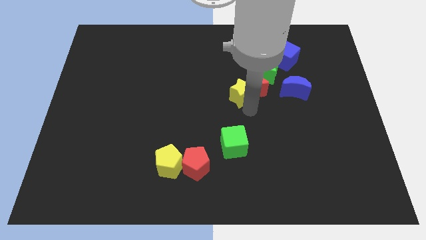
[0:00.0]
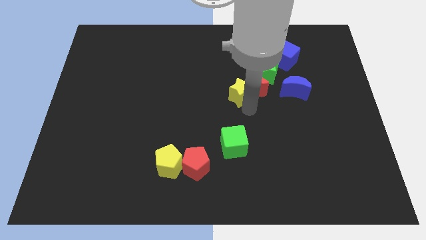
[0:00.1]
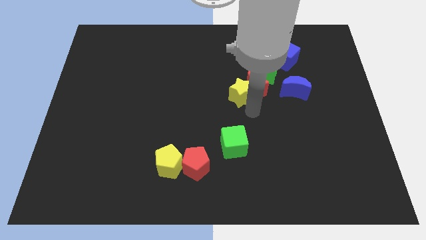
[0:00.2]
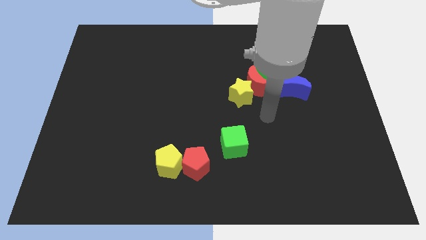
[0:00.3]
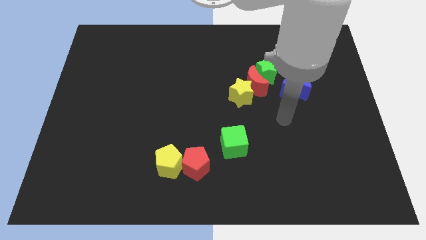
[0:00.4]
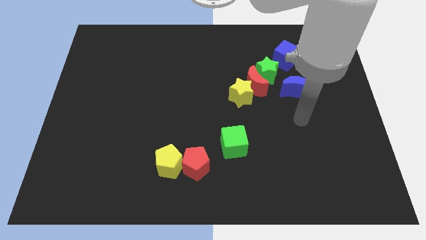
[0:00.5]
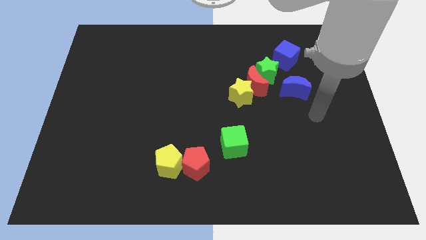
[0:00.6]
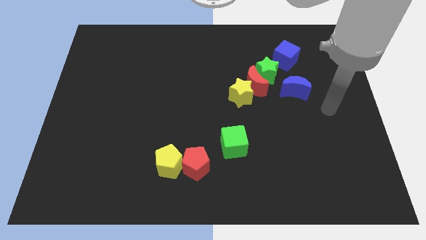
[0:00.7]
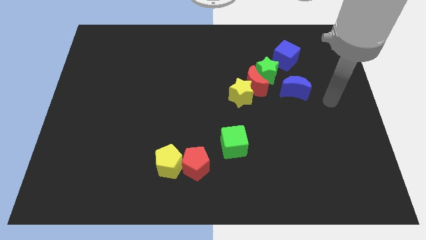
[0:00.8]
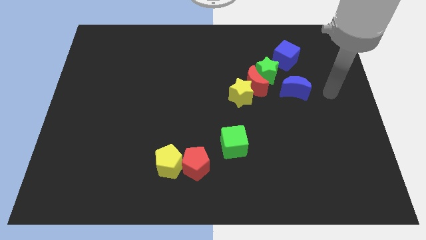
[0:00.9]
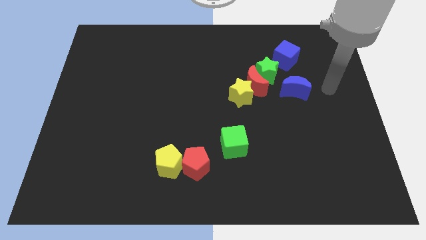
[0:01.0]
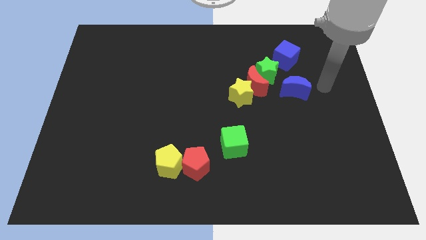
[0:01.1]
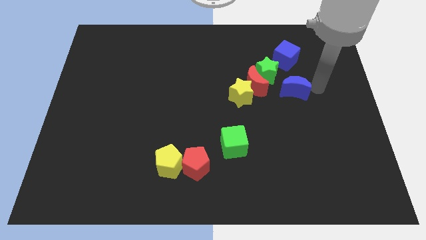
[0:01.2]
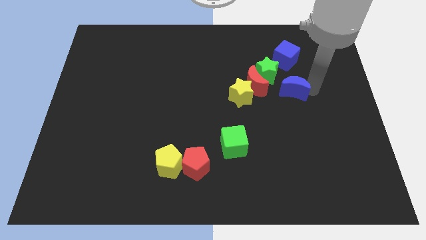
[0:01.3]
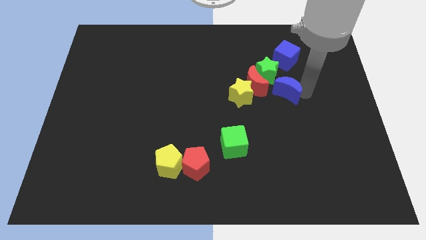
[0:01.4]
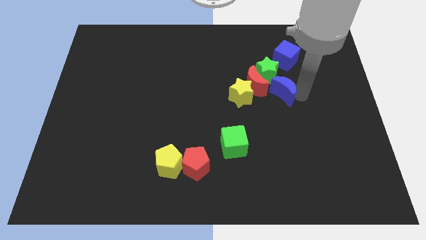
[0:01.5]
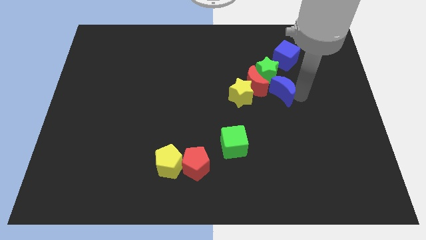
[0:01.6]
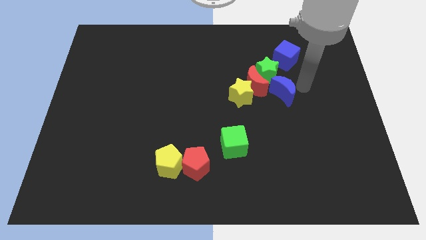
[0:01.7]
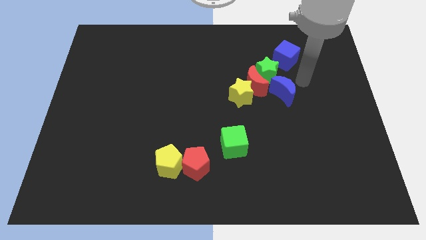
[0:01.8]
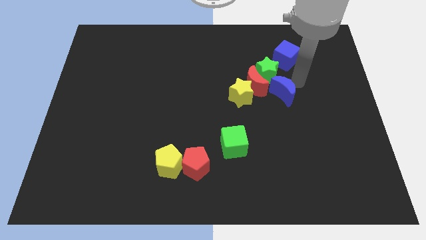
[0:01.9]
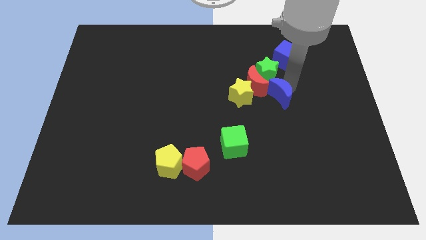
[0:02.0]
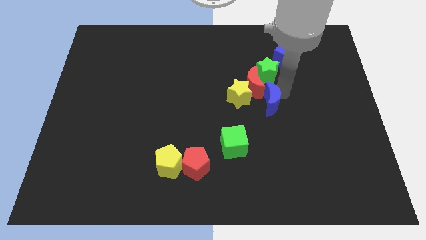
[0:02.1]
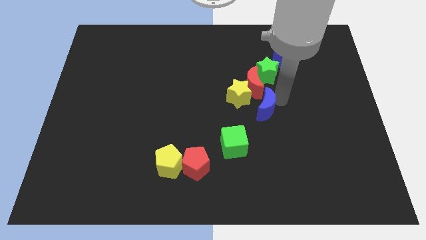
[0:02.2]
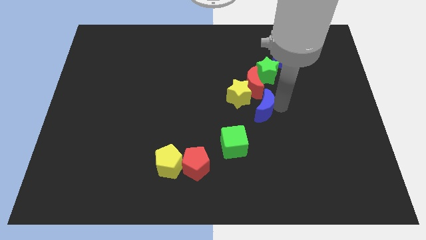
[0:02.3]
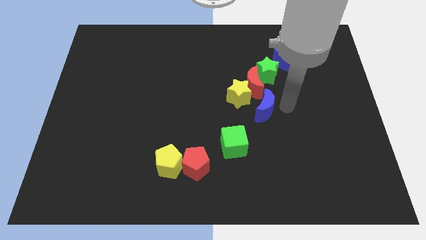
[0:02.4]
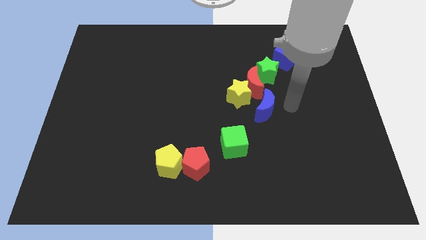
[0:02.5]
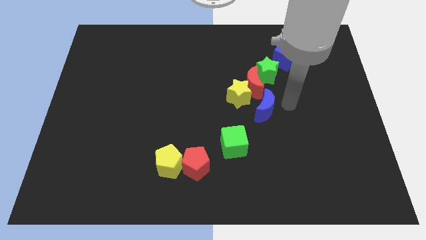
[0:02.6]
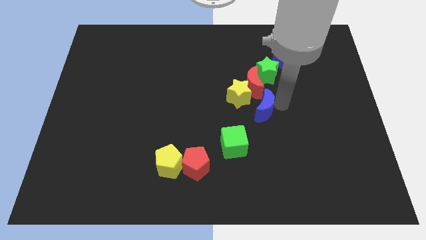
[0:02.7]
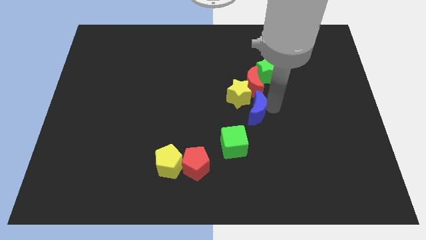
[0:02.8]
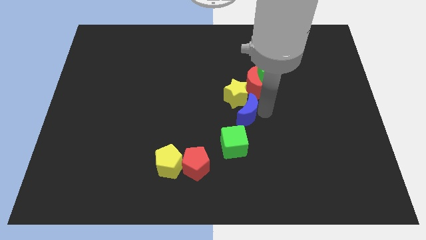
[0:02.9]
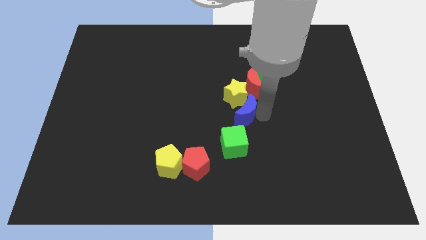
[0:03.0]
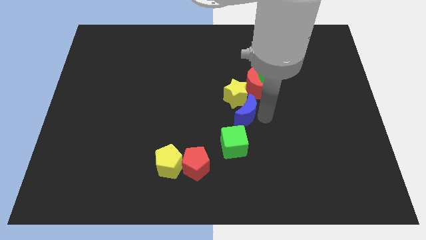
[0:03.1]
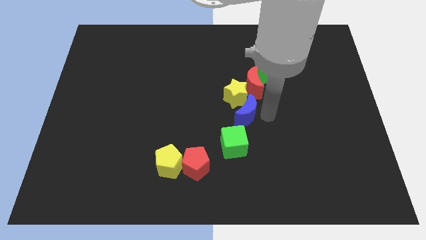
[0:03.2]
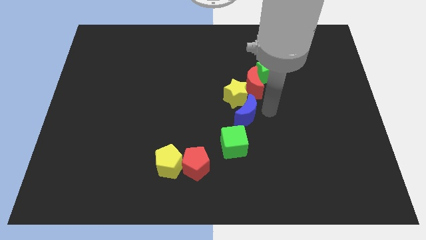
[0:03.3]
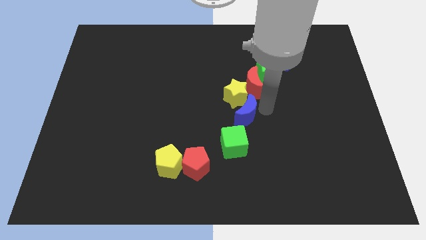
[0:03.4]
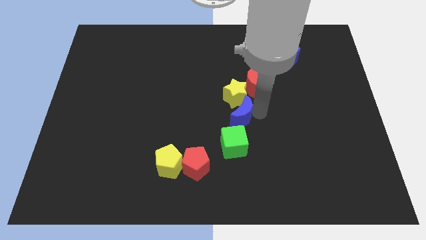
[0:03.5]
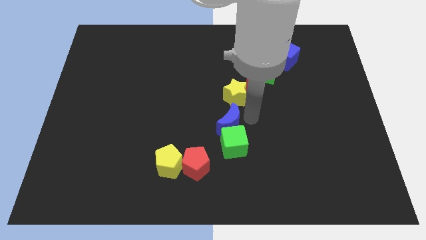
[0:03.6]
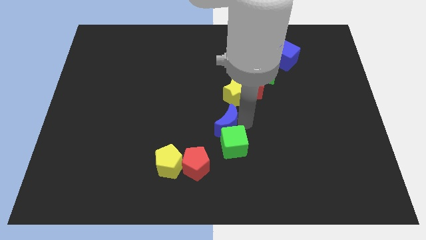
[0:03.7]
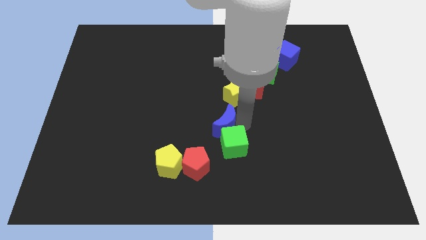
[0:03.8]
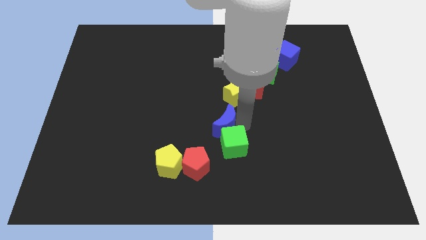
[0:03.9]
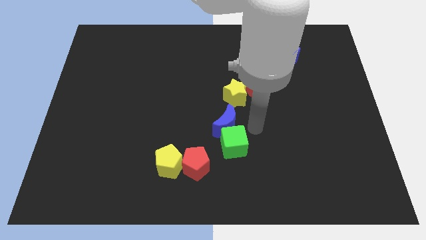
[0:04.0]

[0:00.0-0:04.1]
place blue crescent down to the yellow star

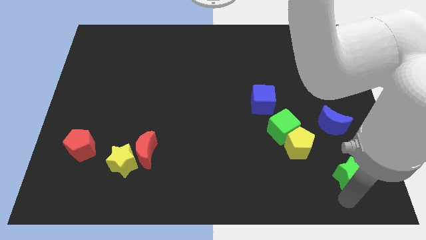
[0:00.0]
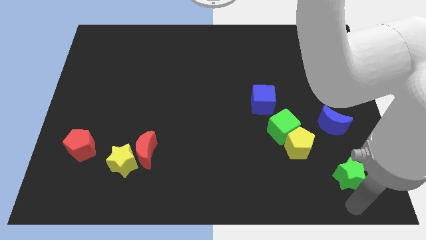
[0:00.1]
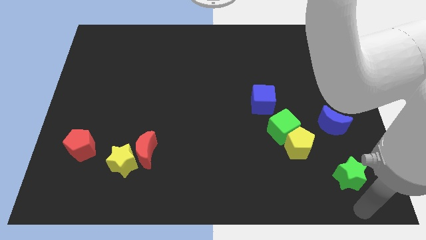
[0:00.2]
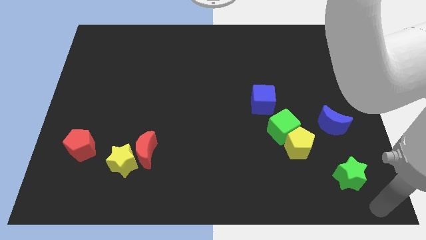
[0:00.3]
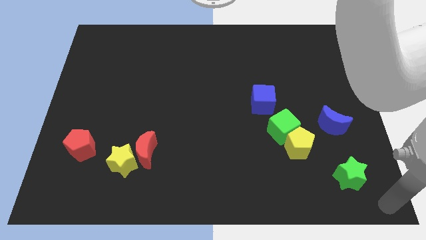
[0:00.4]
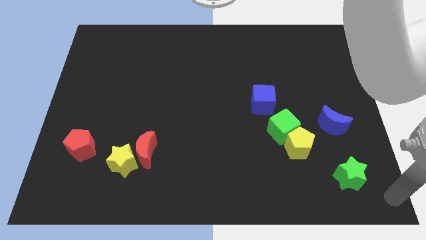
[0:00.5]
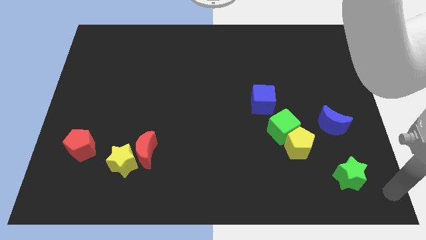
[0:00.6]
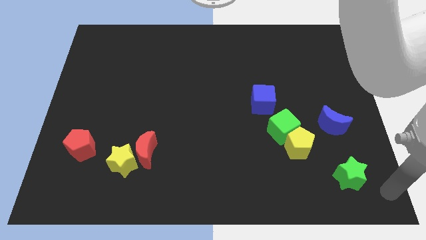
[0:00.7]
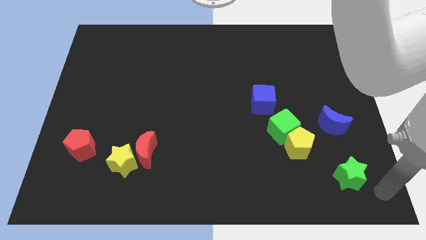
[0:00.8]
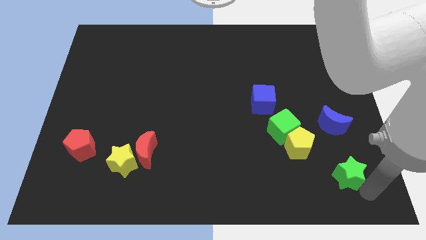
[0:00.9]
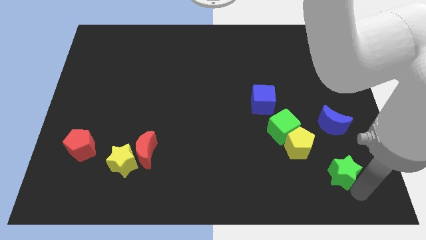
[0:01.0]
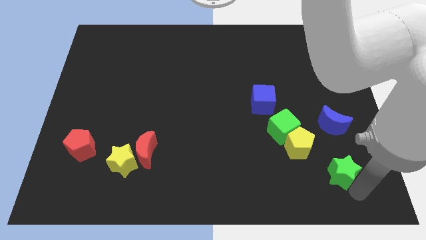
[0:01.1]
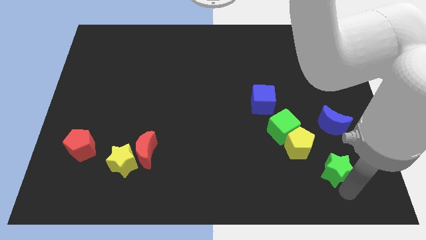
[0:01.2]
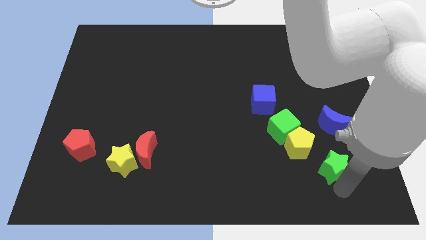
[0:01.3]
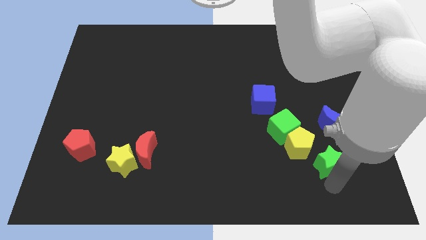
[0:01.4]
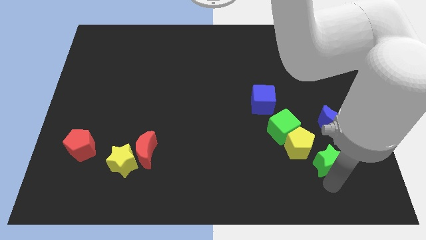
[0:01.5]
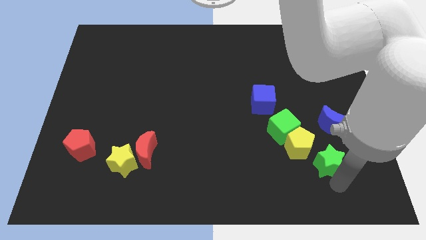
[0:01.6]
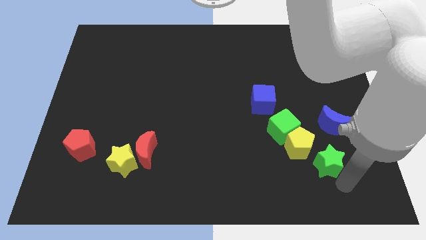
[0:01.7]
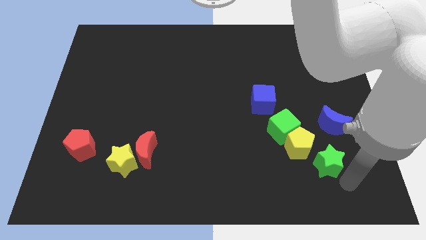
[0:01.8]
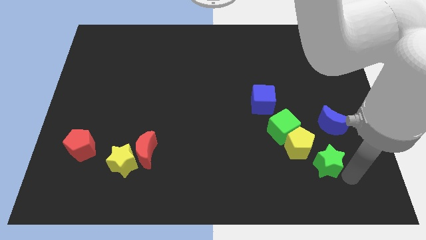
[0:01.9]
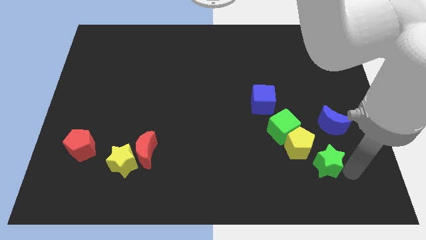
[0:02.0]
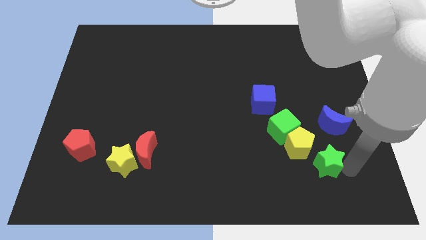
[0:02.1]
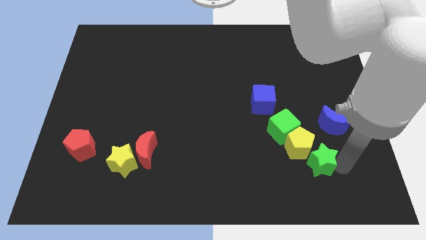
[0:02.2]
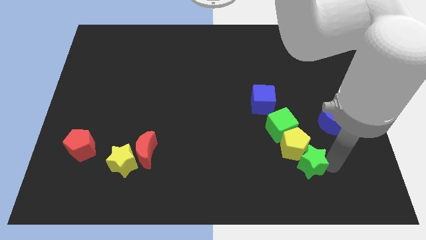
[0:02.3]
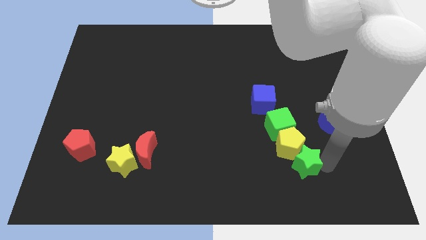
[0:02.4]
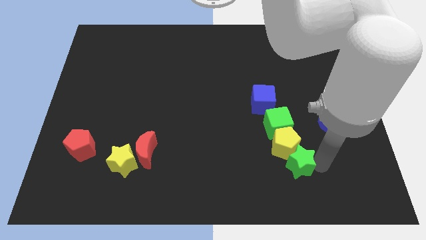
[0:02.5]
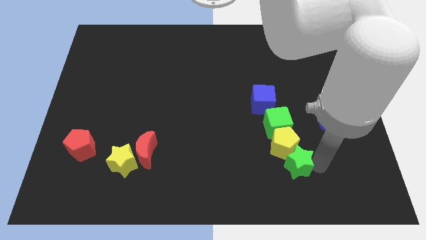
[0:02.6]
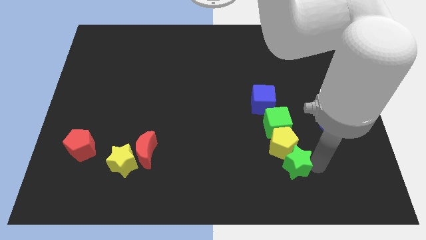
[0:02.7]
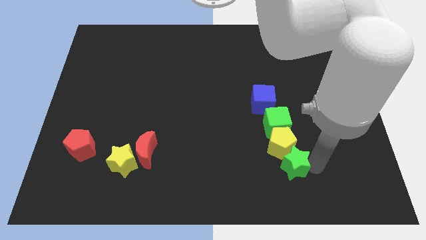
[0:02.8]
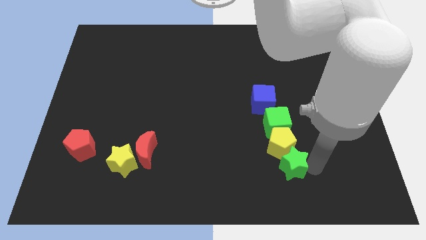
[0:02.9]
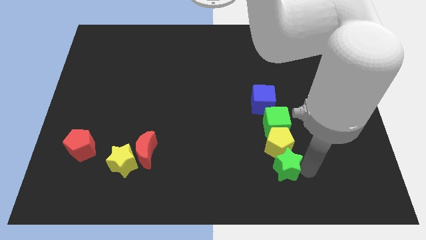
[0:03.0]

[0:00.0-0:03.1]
push green star into yellow pentagon

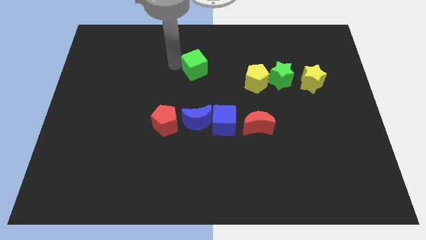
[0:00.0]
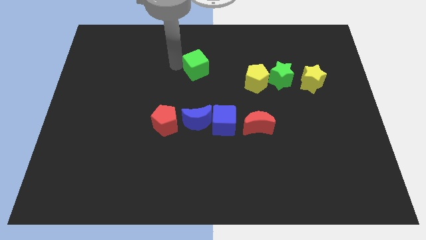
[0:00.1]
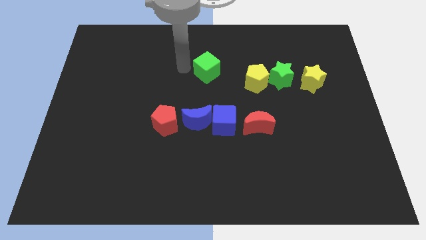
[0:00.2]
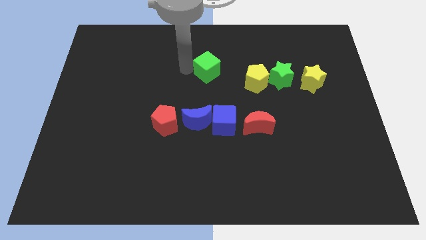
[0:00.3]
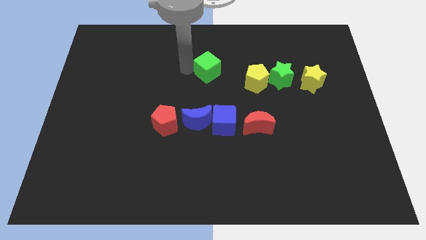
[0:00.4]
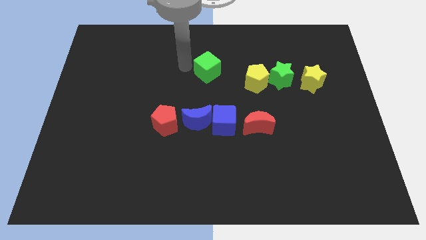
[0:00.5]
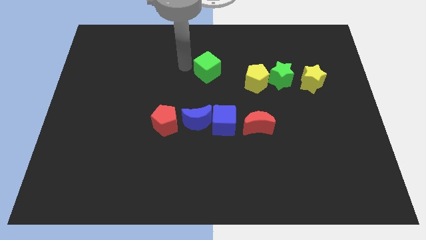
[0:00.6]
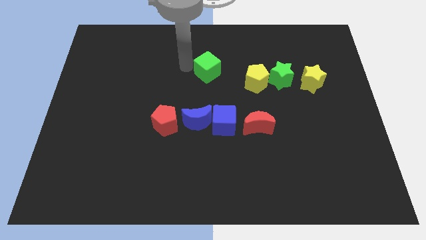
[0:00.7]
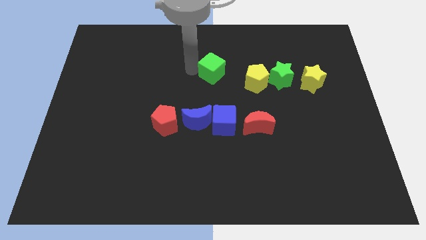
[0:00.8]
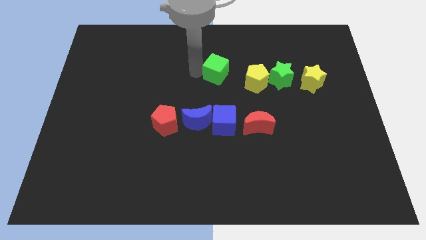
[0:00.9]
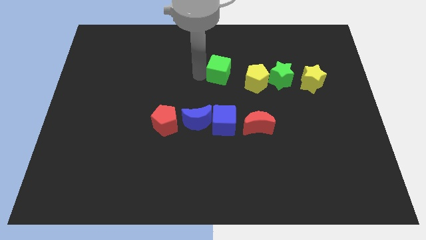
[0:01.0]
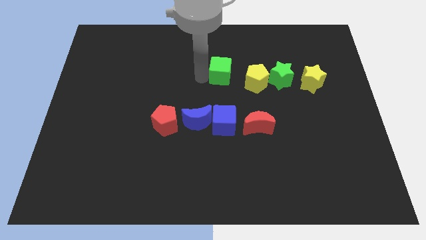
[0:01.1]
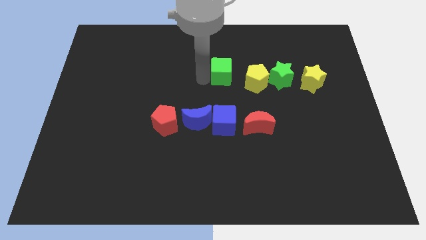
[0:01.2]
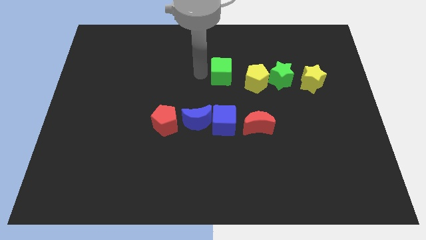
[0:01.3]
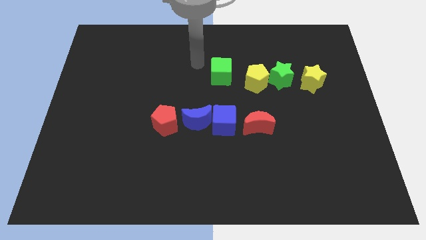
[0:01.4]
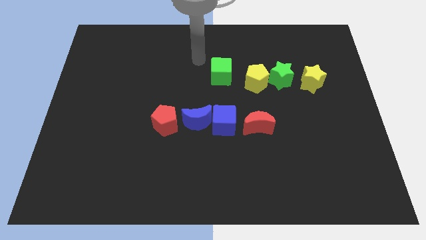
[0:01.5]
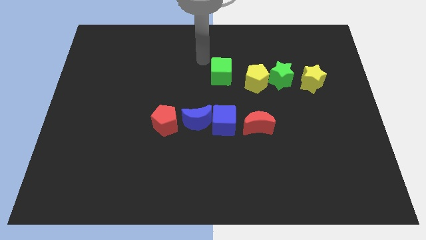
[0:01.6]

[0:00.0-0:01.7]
place green cube to the left of yellow pentagon
